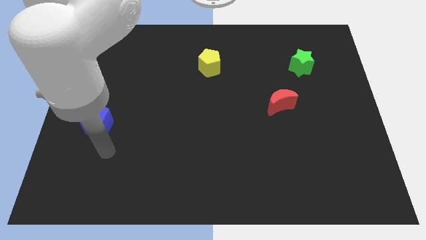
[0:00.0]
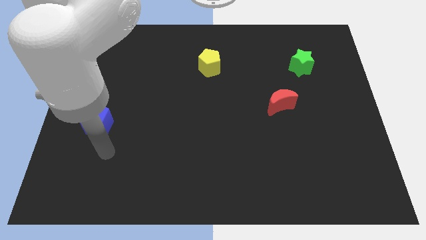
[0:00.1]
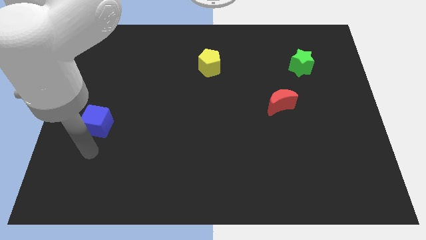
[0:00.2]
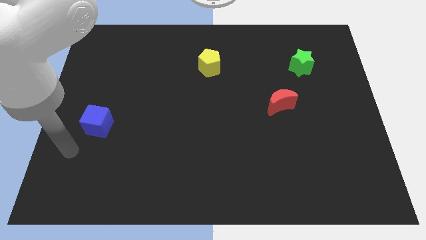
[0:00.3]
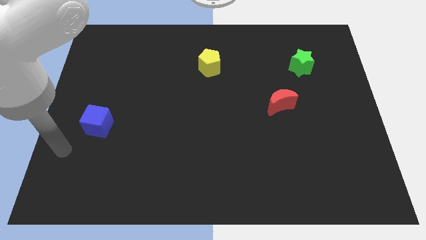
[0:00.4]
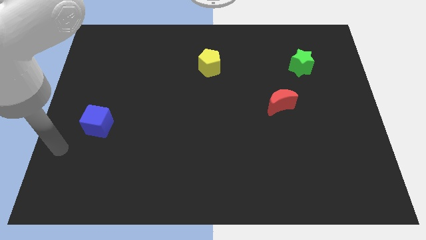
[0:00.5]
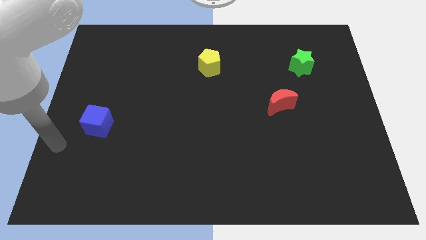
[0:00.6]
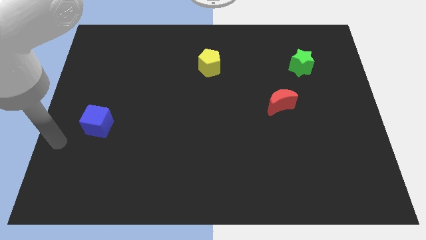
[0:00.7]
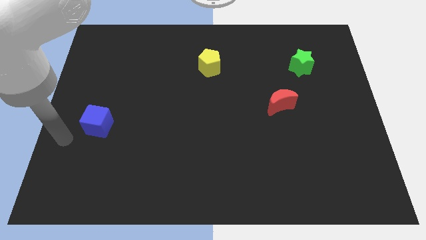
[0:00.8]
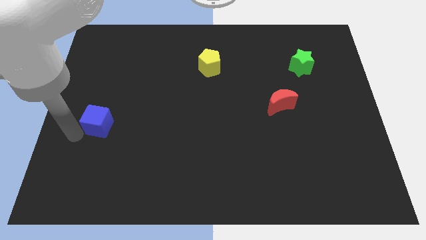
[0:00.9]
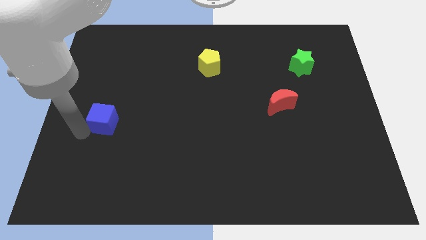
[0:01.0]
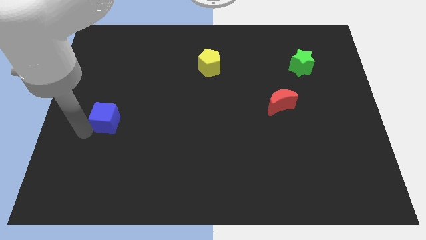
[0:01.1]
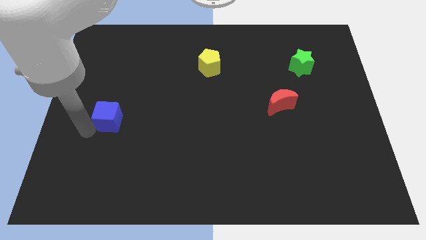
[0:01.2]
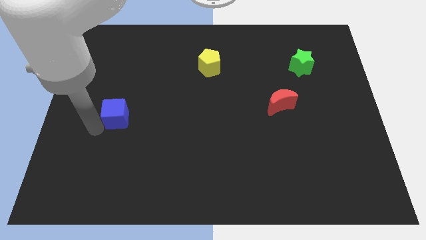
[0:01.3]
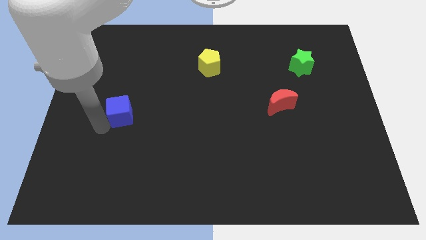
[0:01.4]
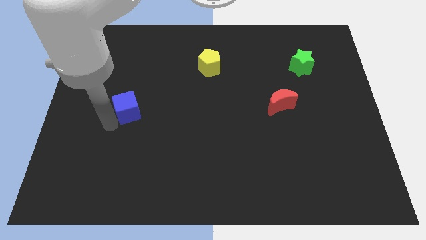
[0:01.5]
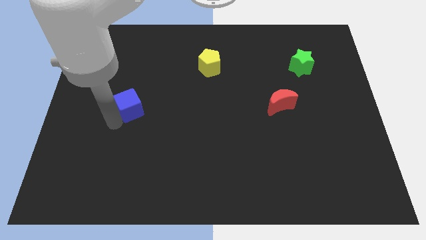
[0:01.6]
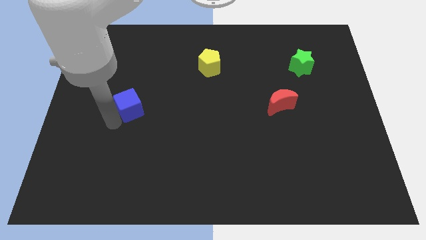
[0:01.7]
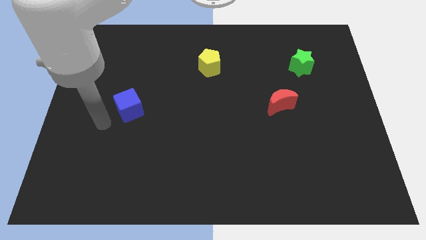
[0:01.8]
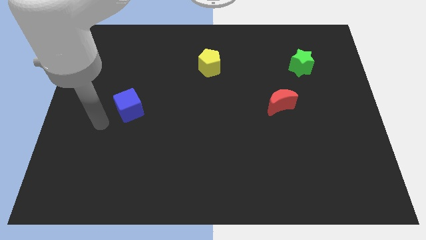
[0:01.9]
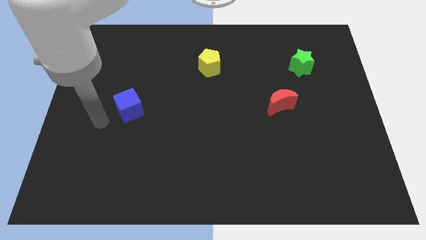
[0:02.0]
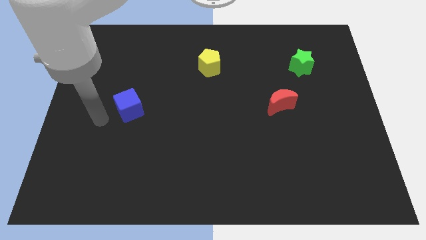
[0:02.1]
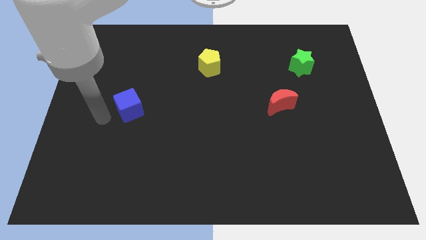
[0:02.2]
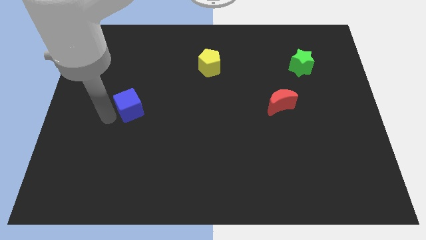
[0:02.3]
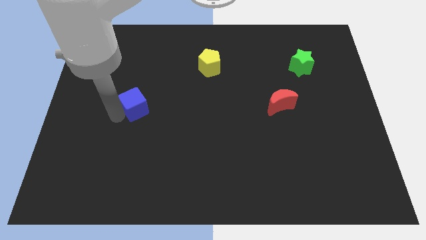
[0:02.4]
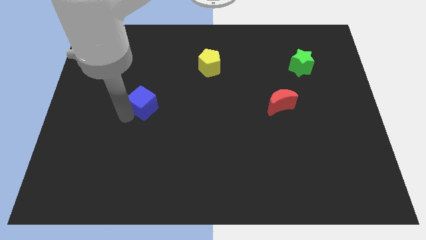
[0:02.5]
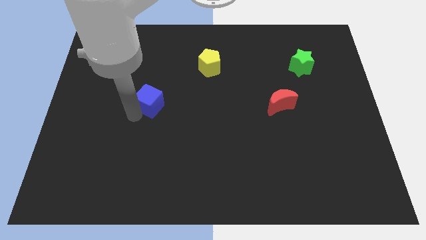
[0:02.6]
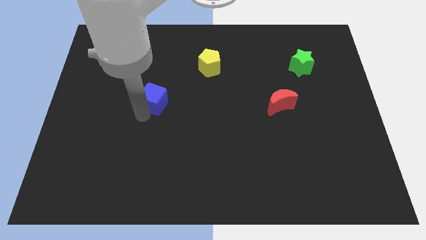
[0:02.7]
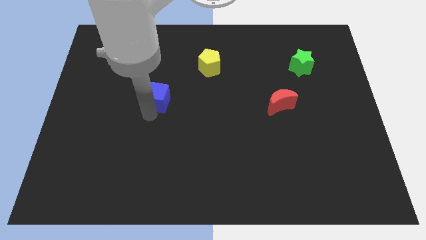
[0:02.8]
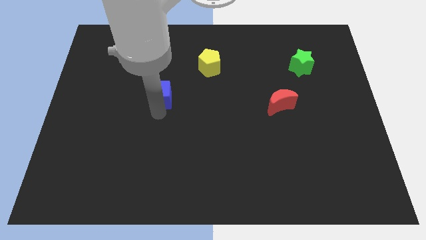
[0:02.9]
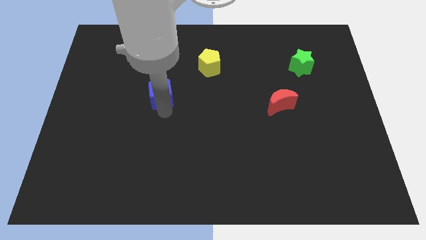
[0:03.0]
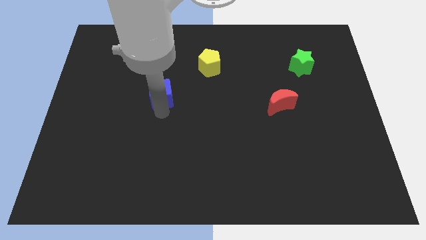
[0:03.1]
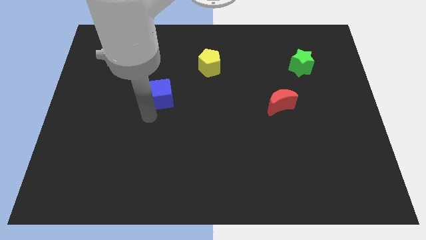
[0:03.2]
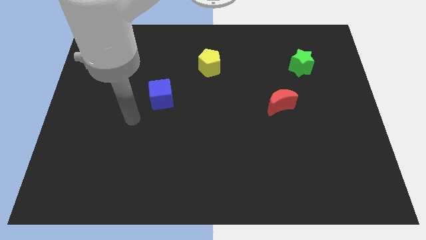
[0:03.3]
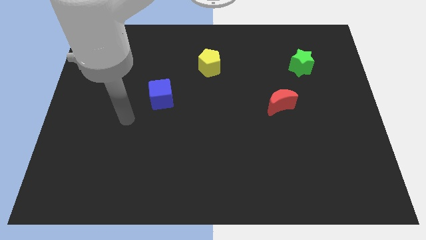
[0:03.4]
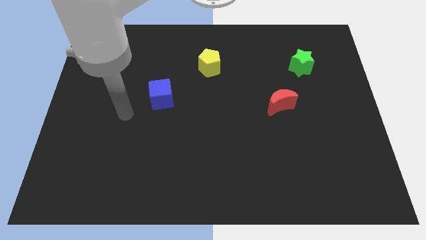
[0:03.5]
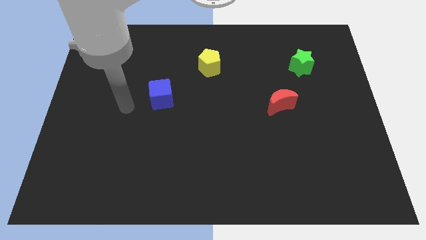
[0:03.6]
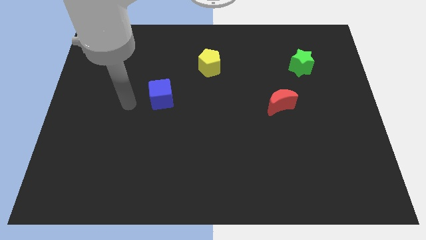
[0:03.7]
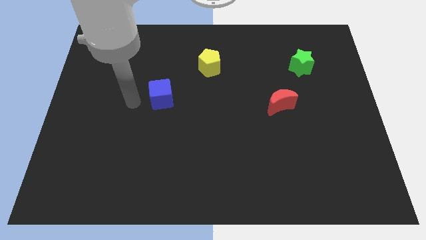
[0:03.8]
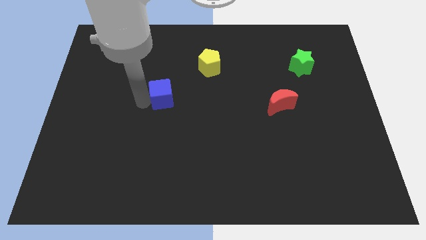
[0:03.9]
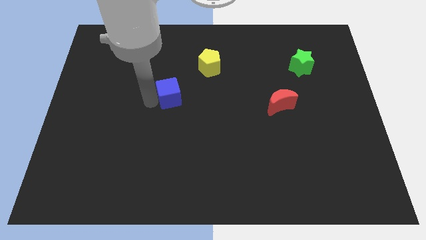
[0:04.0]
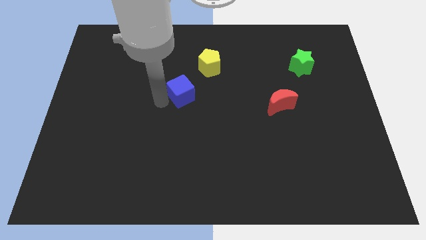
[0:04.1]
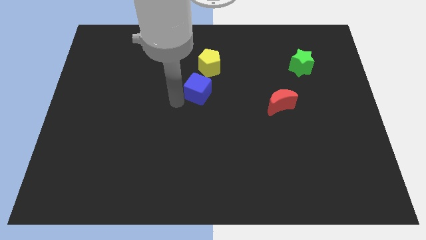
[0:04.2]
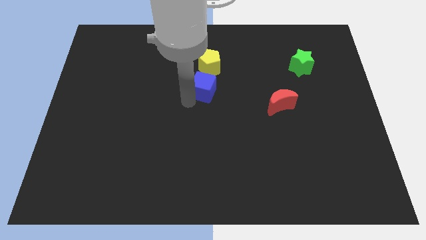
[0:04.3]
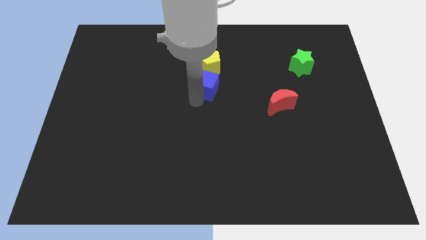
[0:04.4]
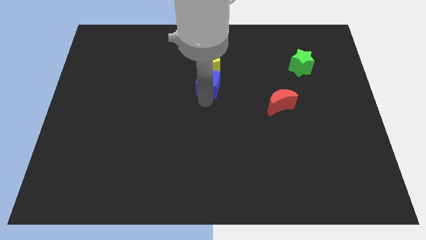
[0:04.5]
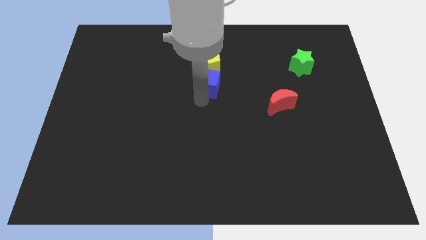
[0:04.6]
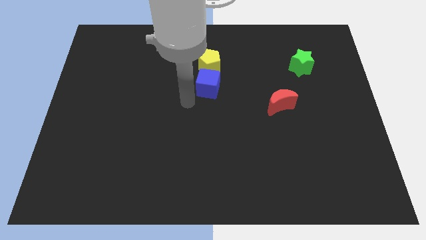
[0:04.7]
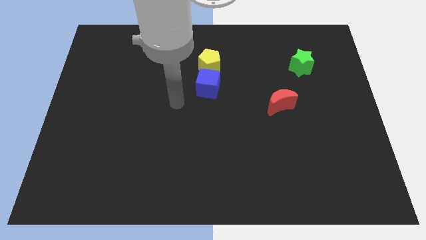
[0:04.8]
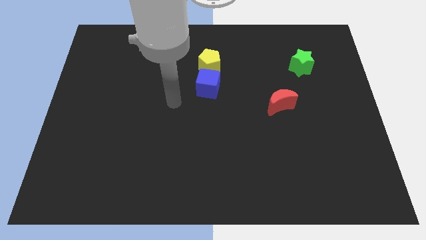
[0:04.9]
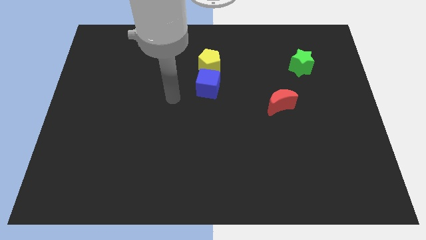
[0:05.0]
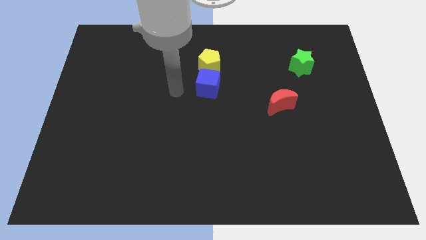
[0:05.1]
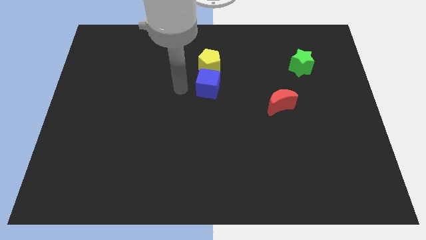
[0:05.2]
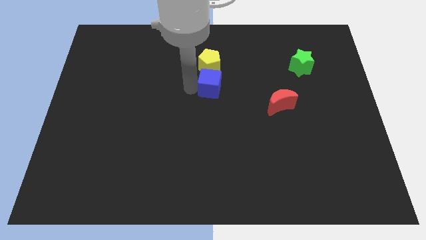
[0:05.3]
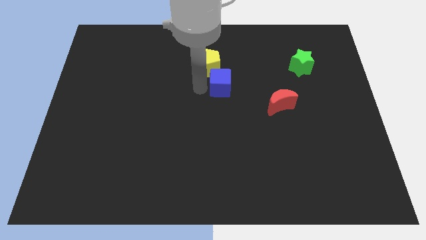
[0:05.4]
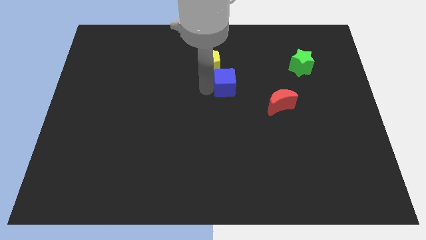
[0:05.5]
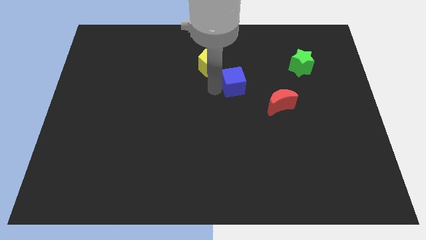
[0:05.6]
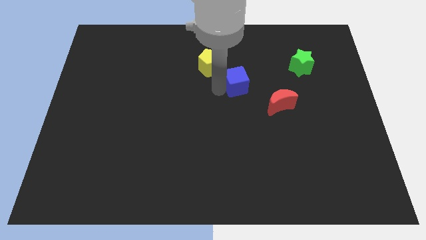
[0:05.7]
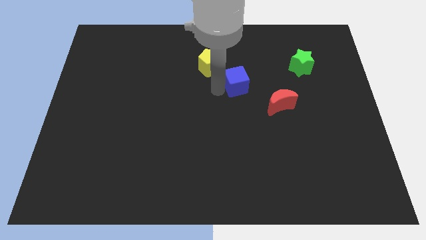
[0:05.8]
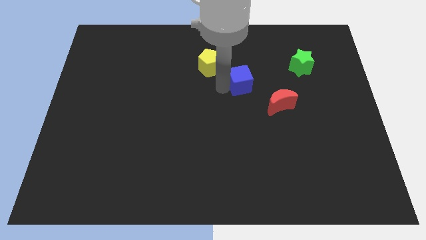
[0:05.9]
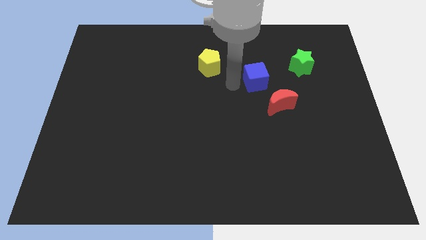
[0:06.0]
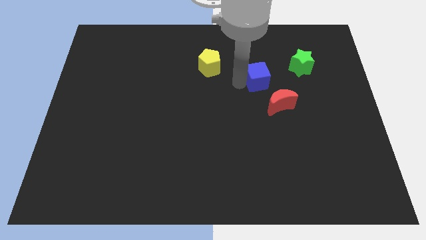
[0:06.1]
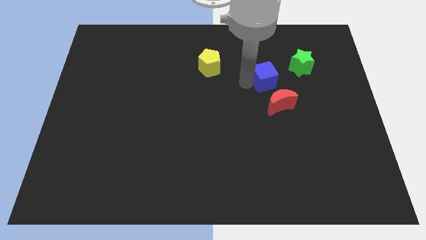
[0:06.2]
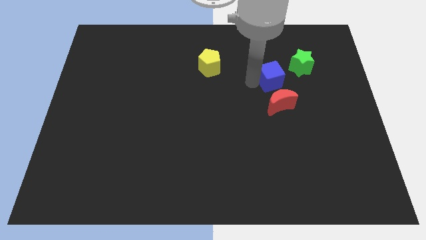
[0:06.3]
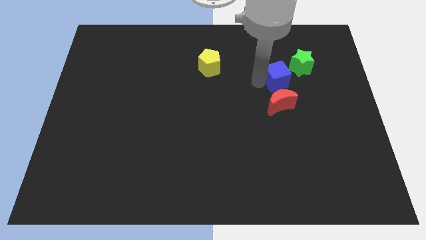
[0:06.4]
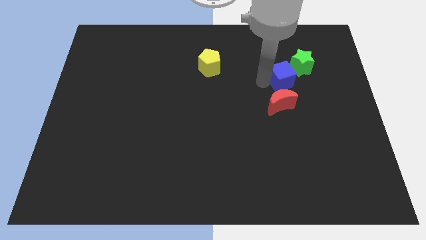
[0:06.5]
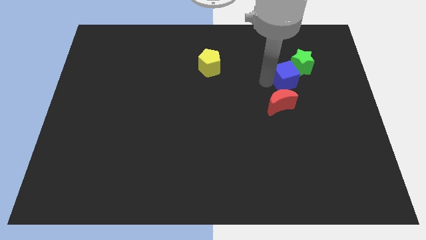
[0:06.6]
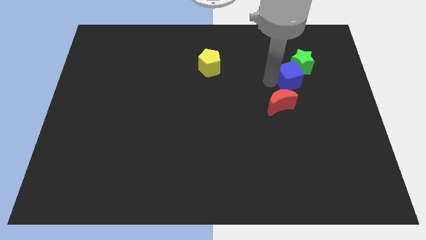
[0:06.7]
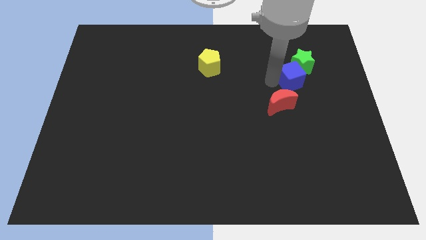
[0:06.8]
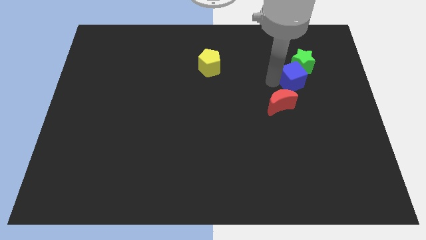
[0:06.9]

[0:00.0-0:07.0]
push the blue block close to the green block

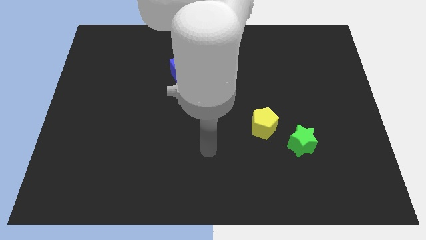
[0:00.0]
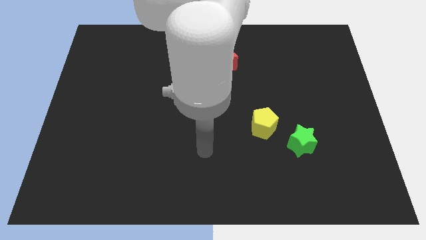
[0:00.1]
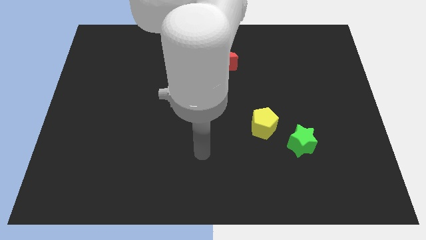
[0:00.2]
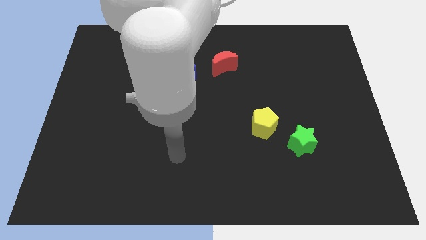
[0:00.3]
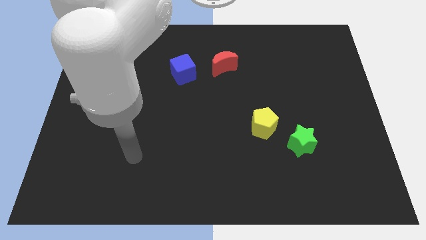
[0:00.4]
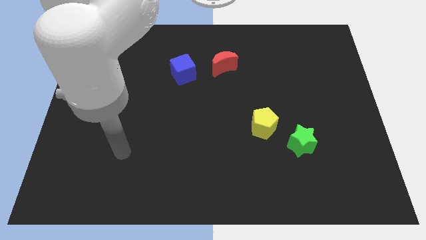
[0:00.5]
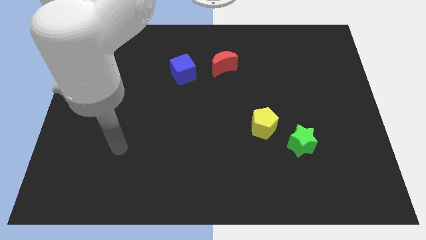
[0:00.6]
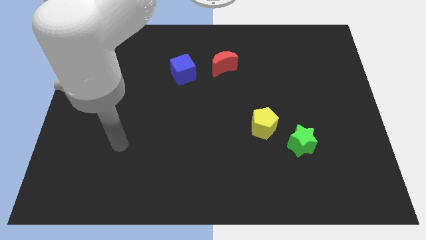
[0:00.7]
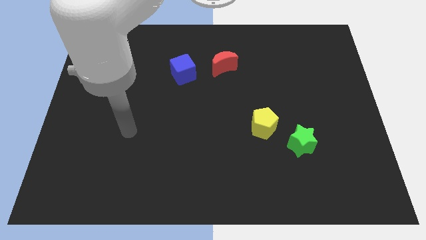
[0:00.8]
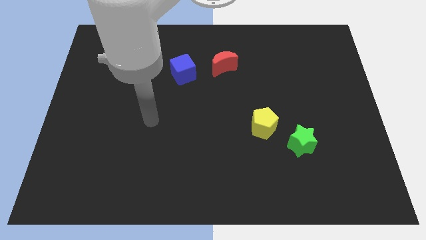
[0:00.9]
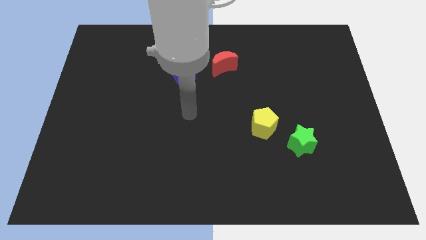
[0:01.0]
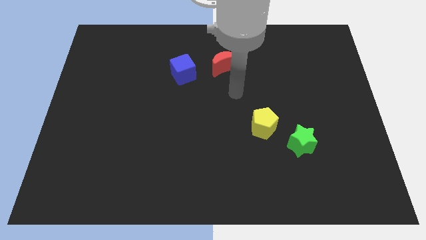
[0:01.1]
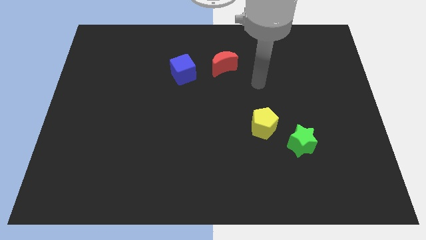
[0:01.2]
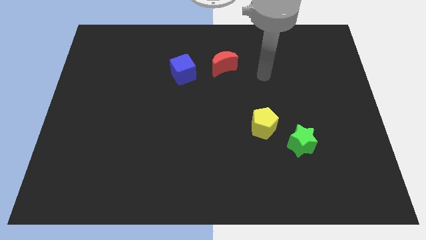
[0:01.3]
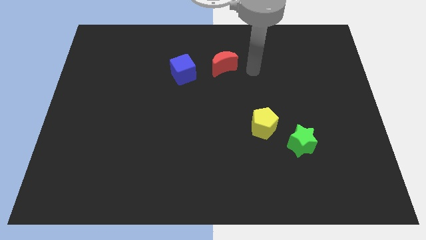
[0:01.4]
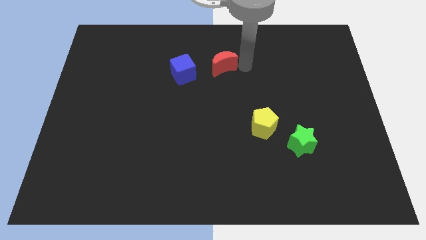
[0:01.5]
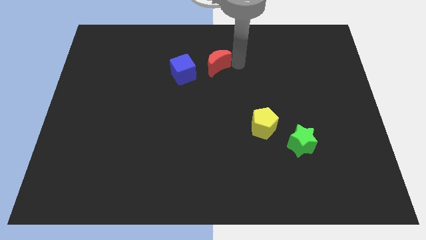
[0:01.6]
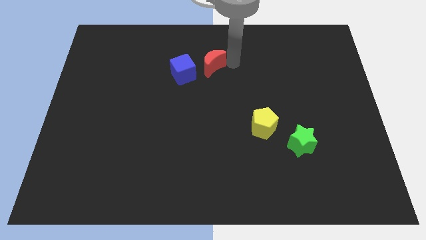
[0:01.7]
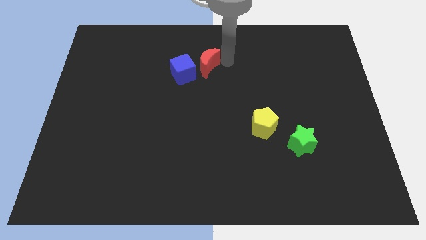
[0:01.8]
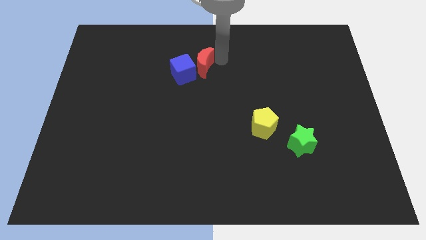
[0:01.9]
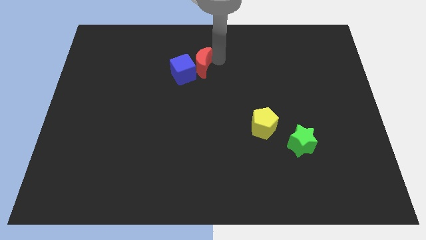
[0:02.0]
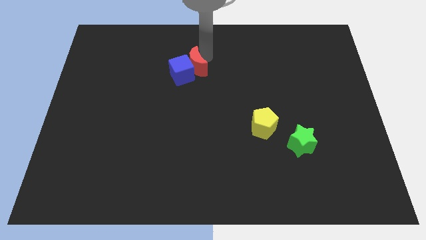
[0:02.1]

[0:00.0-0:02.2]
push the red moon towards the cube
